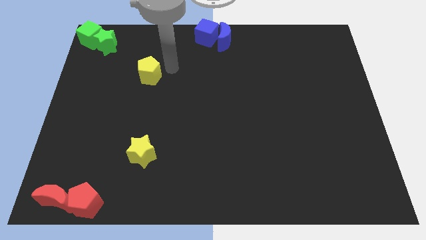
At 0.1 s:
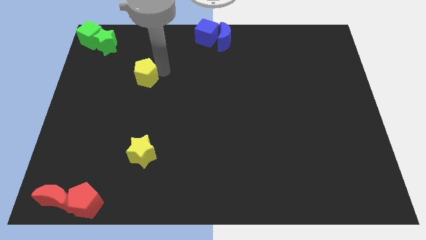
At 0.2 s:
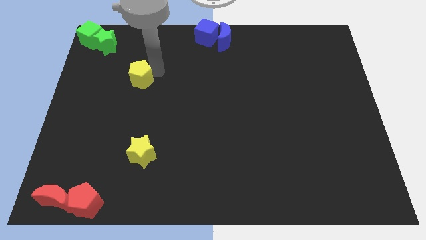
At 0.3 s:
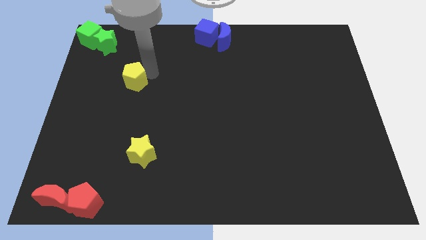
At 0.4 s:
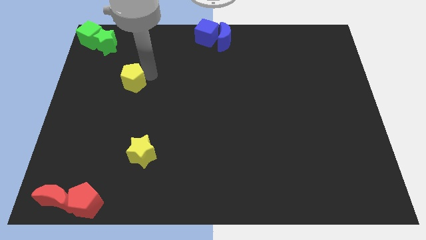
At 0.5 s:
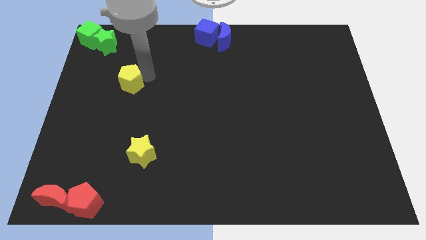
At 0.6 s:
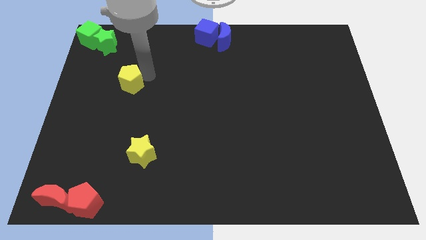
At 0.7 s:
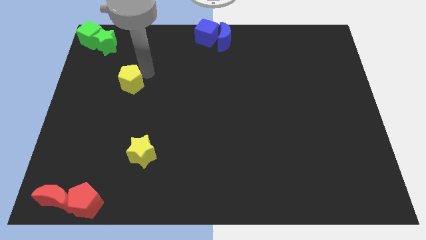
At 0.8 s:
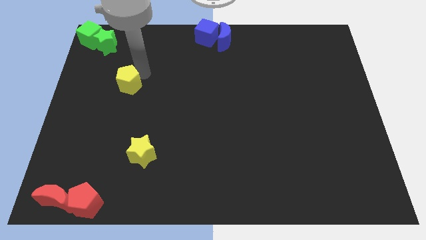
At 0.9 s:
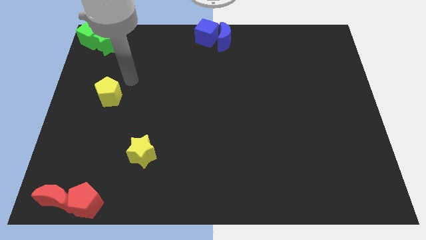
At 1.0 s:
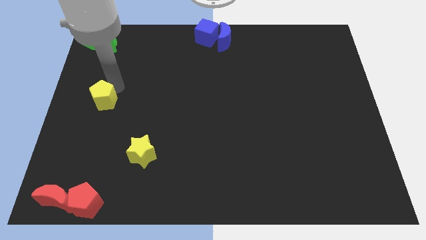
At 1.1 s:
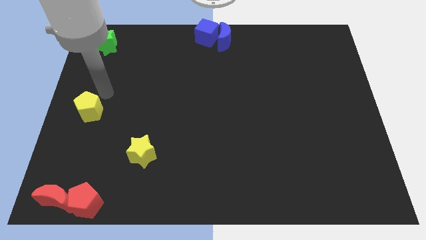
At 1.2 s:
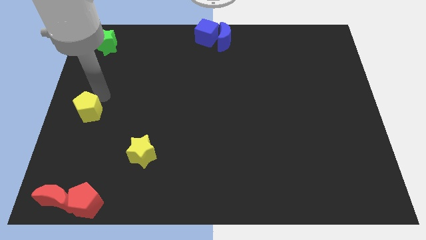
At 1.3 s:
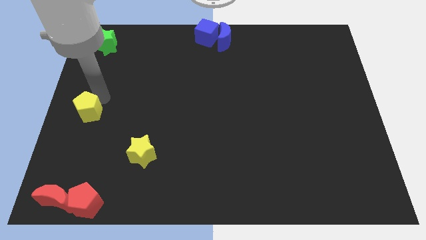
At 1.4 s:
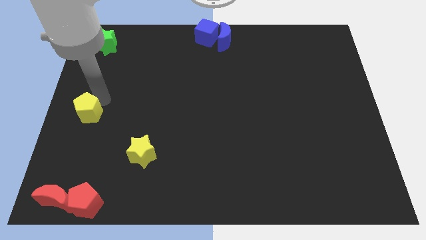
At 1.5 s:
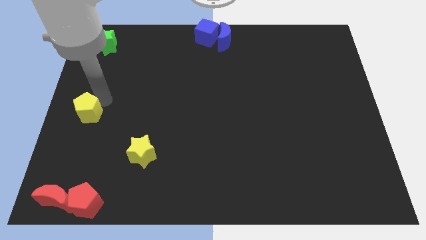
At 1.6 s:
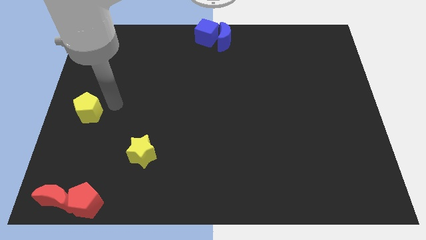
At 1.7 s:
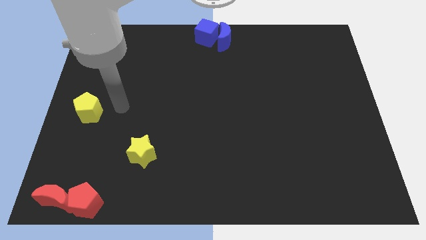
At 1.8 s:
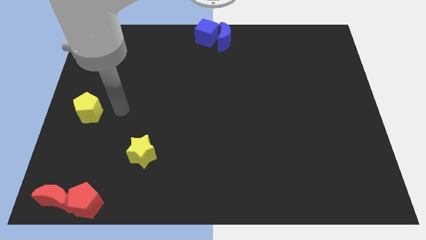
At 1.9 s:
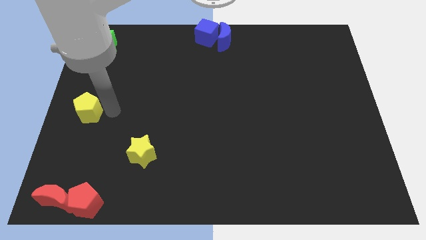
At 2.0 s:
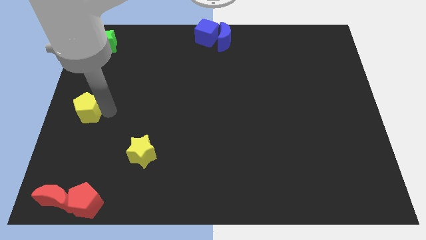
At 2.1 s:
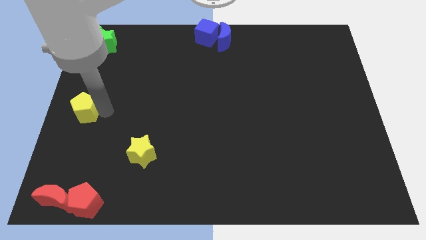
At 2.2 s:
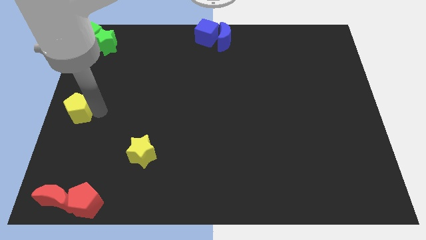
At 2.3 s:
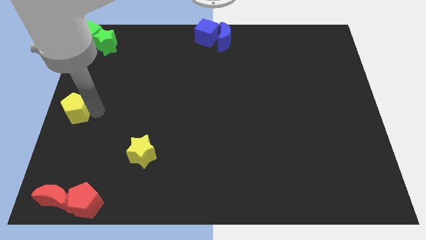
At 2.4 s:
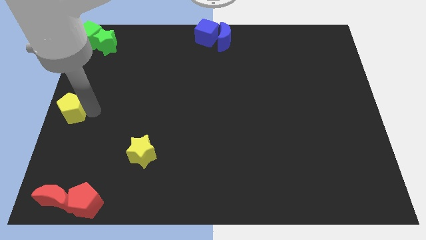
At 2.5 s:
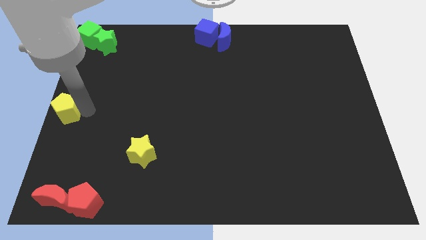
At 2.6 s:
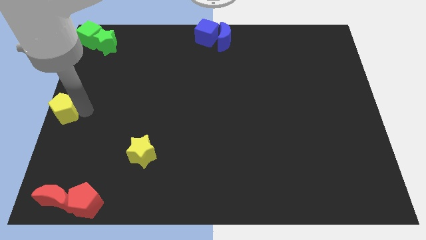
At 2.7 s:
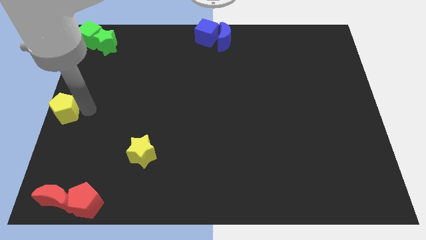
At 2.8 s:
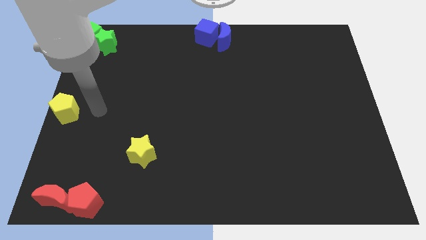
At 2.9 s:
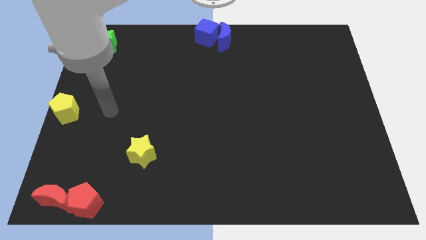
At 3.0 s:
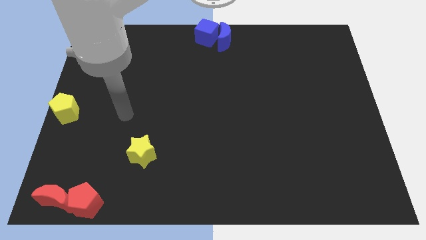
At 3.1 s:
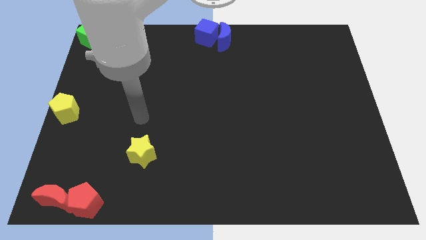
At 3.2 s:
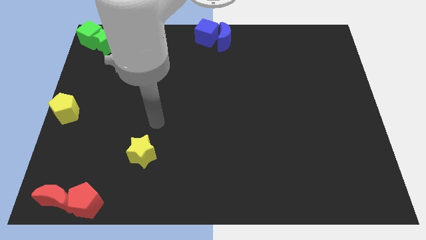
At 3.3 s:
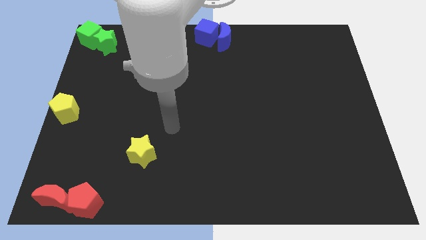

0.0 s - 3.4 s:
slide the yellow pentagon to the center left of the board

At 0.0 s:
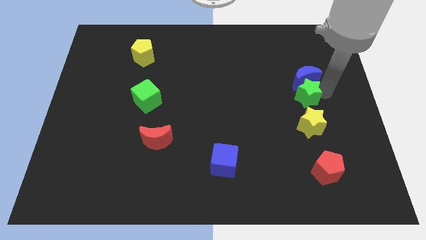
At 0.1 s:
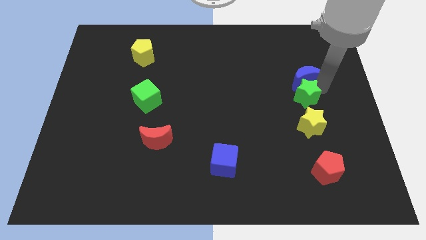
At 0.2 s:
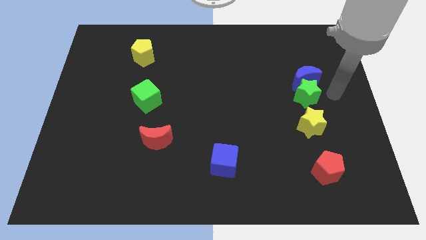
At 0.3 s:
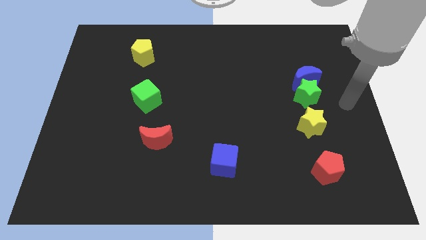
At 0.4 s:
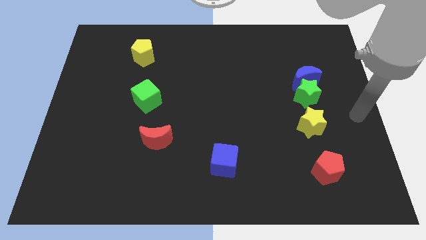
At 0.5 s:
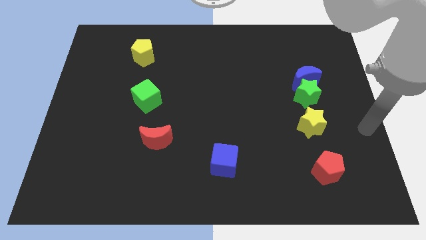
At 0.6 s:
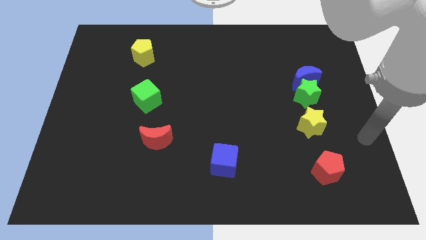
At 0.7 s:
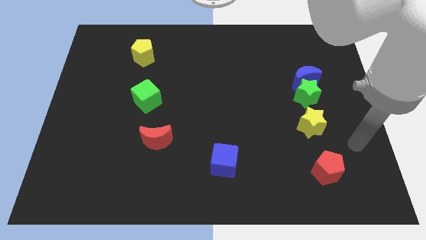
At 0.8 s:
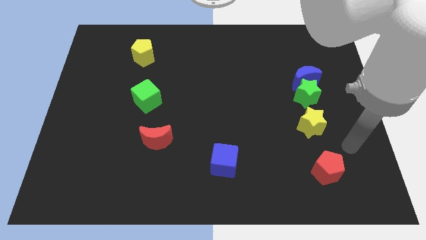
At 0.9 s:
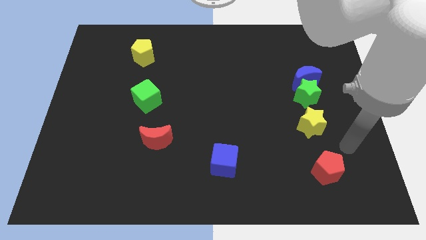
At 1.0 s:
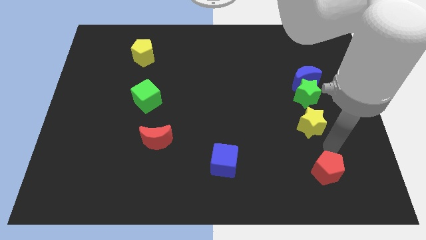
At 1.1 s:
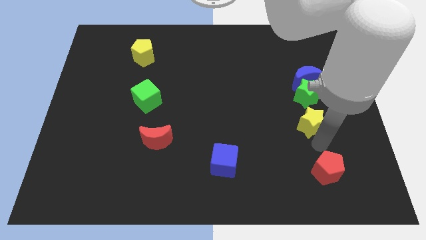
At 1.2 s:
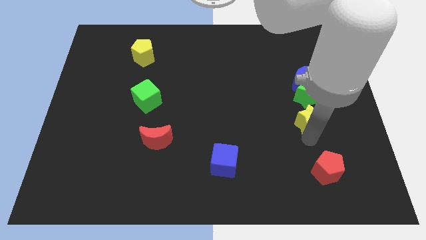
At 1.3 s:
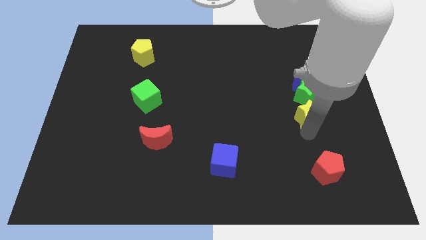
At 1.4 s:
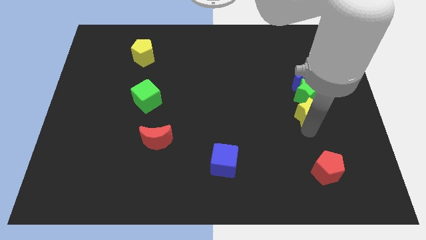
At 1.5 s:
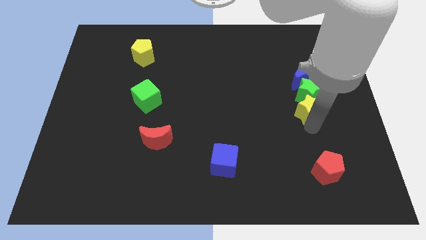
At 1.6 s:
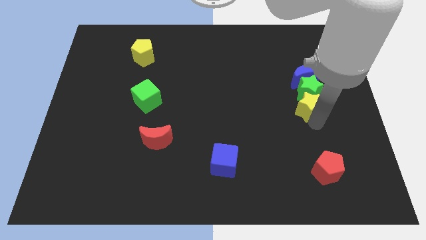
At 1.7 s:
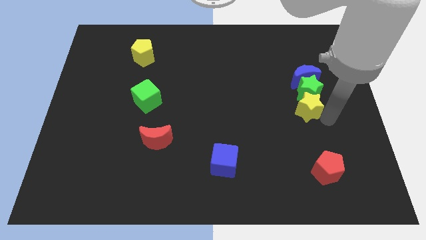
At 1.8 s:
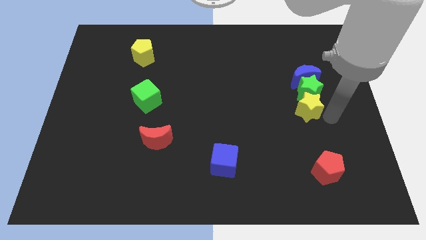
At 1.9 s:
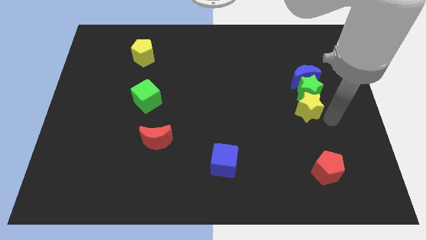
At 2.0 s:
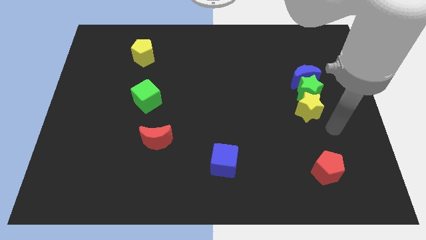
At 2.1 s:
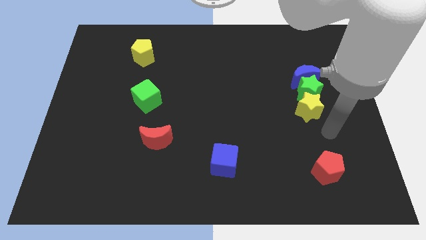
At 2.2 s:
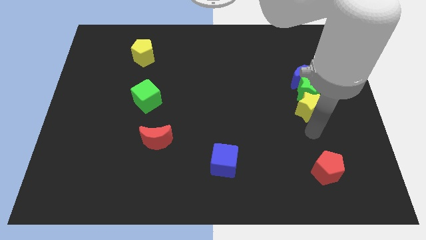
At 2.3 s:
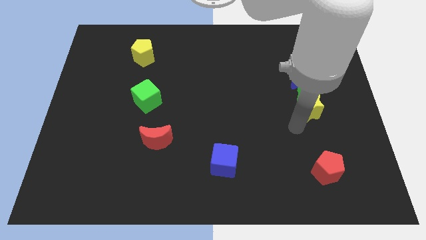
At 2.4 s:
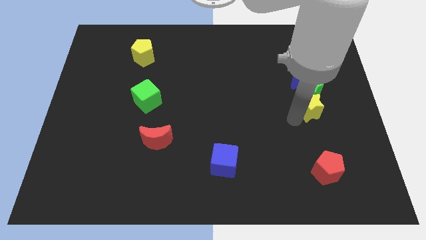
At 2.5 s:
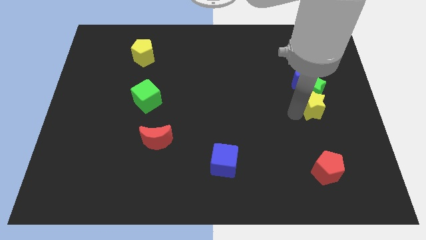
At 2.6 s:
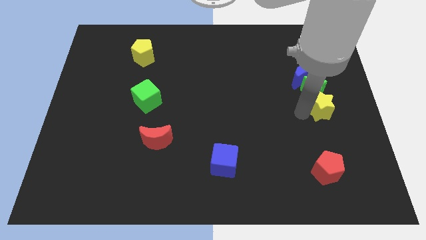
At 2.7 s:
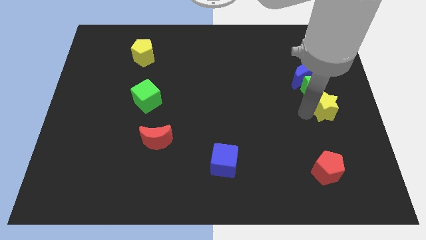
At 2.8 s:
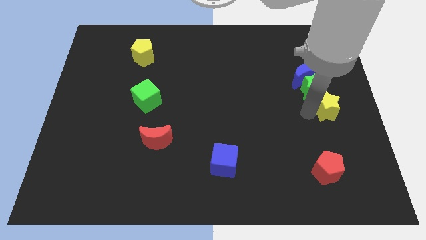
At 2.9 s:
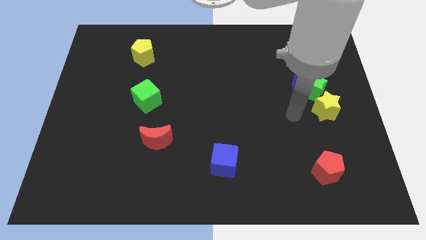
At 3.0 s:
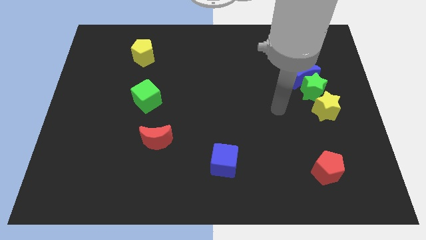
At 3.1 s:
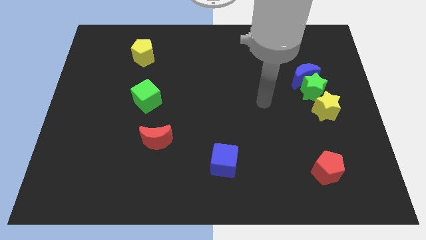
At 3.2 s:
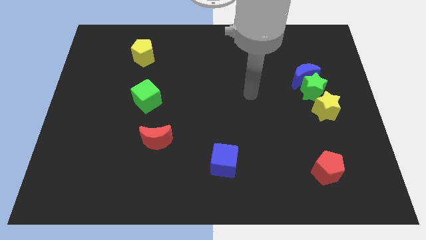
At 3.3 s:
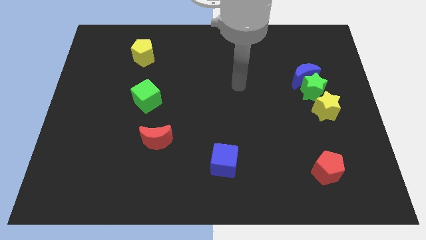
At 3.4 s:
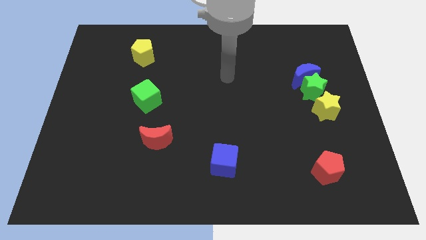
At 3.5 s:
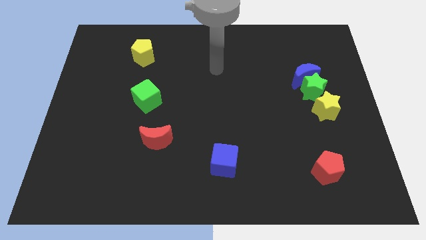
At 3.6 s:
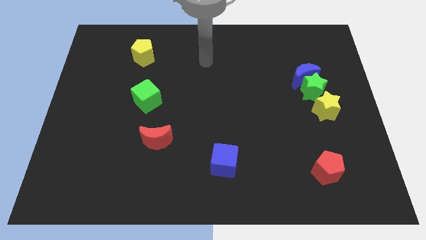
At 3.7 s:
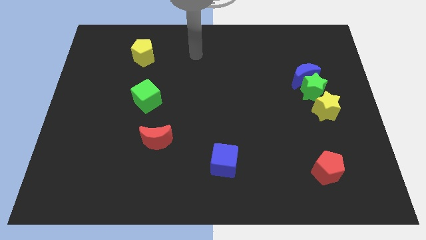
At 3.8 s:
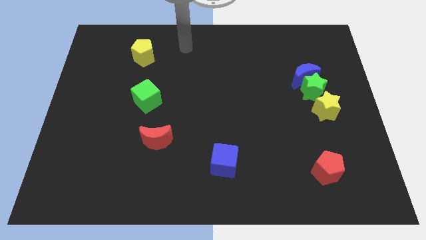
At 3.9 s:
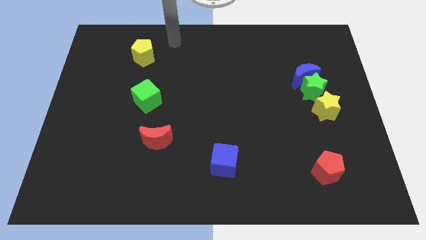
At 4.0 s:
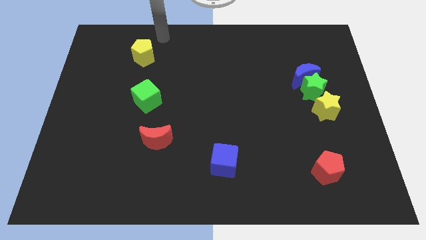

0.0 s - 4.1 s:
push yellow star into the green star

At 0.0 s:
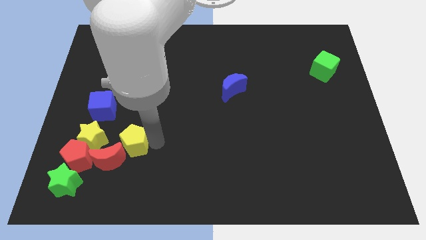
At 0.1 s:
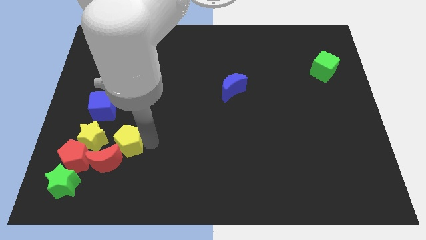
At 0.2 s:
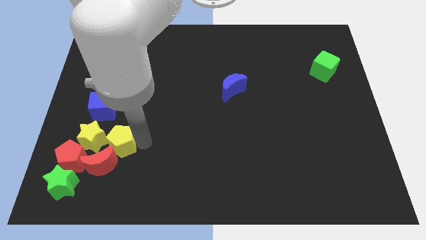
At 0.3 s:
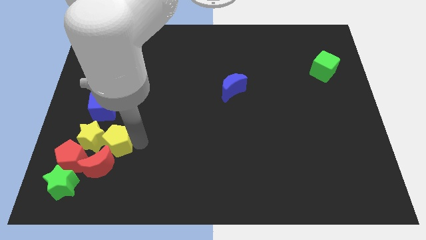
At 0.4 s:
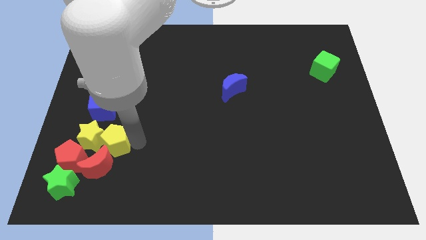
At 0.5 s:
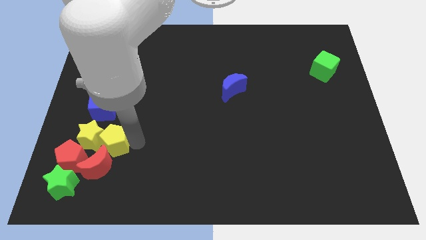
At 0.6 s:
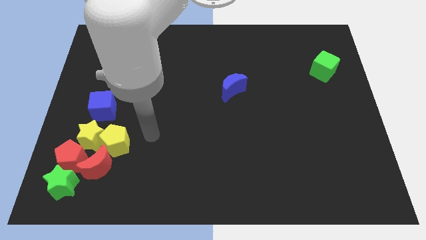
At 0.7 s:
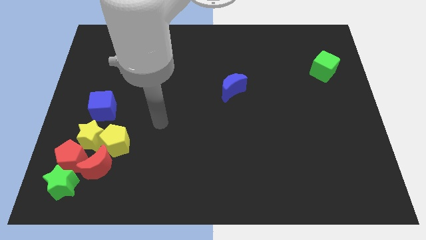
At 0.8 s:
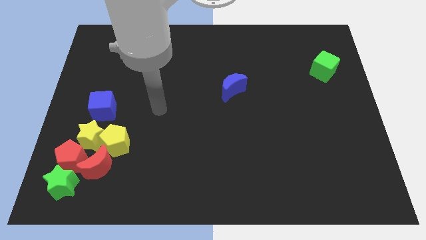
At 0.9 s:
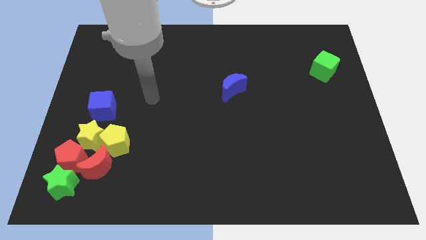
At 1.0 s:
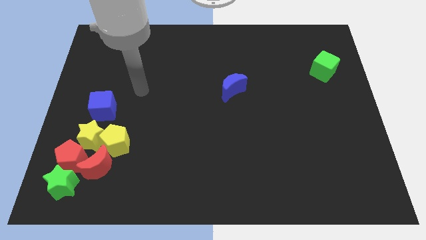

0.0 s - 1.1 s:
move the yellow pentagon to the group of blocks

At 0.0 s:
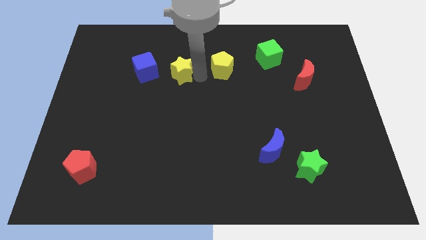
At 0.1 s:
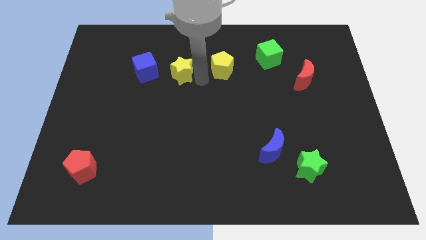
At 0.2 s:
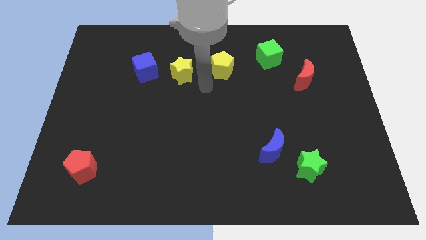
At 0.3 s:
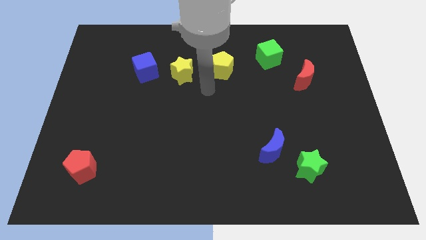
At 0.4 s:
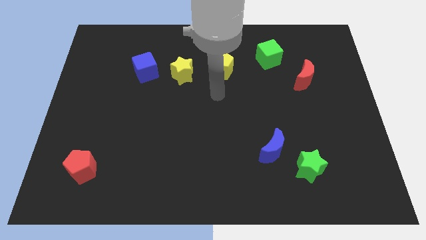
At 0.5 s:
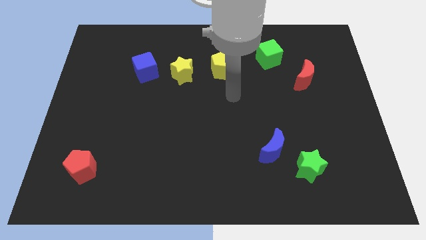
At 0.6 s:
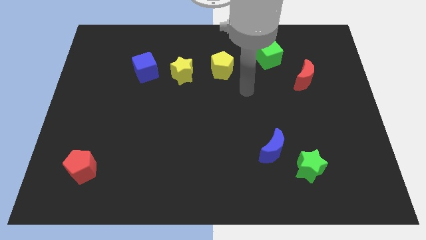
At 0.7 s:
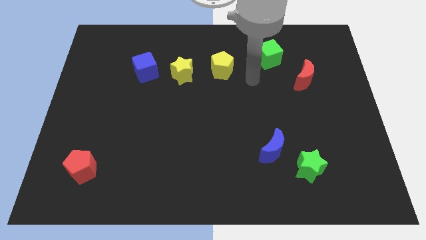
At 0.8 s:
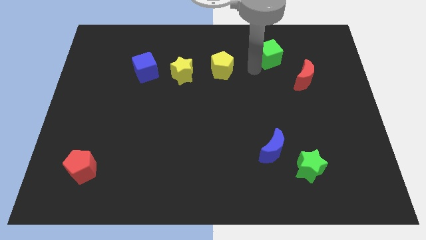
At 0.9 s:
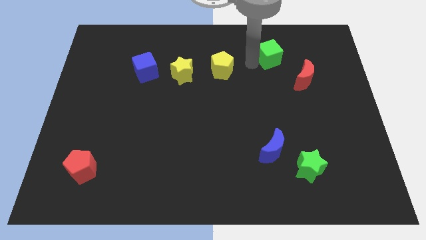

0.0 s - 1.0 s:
move your arm near green cube
